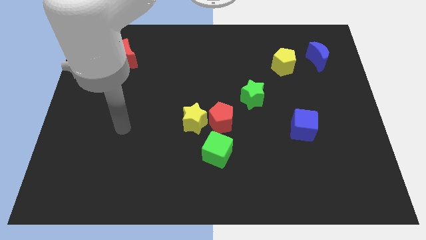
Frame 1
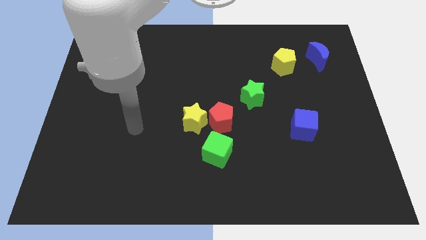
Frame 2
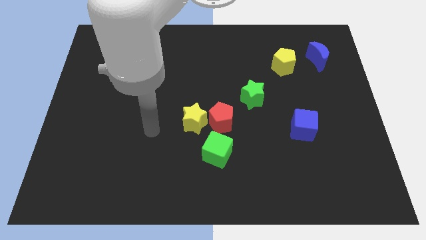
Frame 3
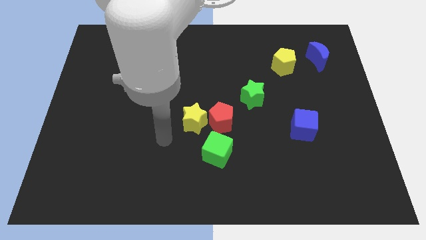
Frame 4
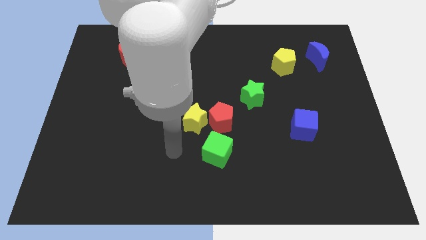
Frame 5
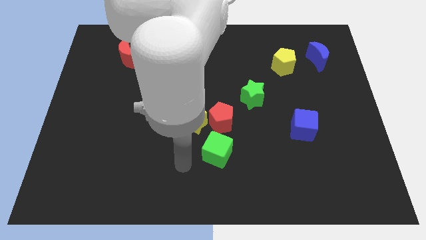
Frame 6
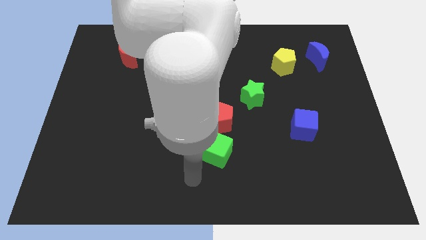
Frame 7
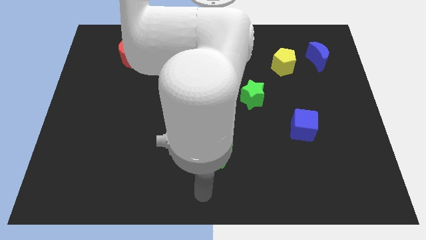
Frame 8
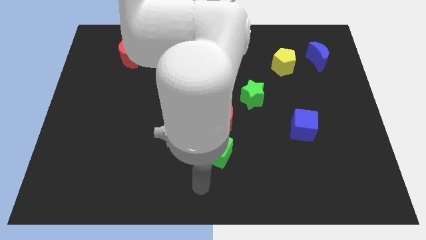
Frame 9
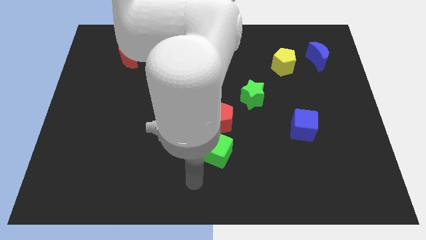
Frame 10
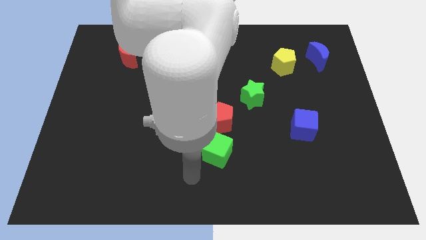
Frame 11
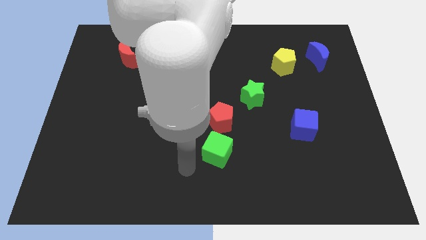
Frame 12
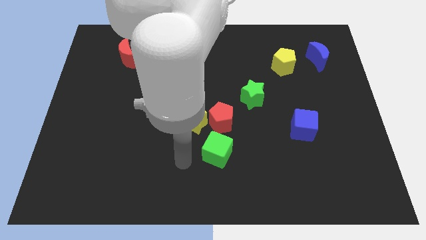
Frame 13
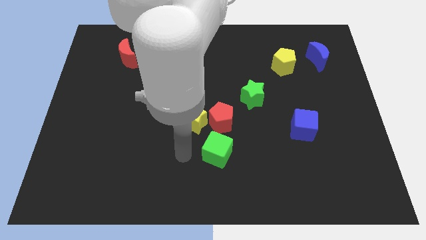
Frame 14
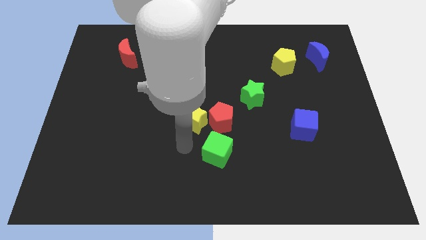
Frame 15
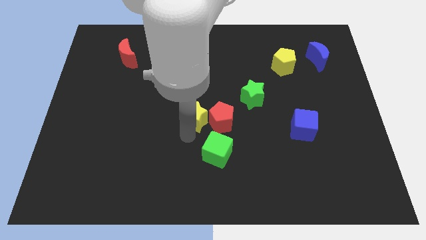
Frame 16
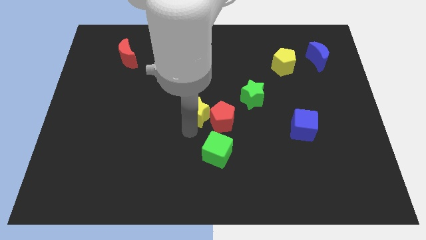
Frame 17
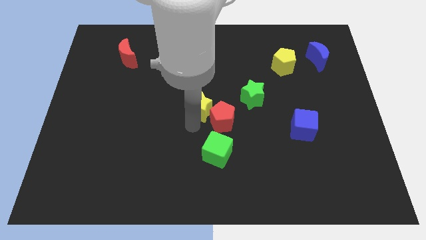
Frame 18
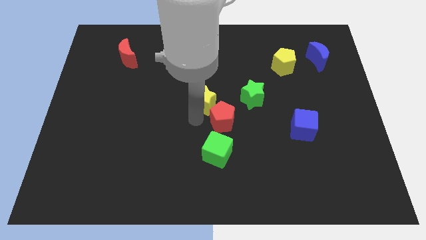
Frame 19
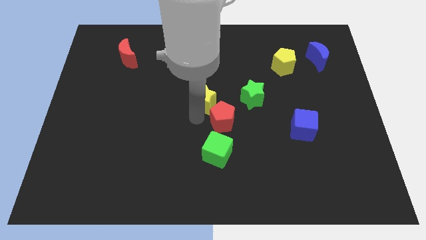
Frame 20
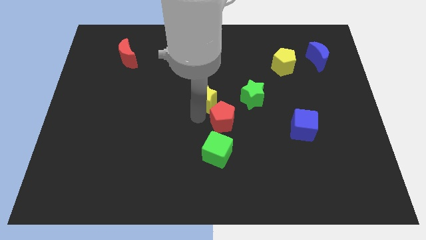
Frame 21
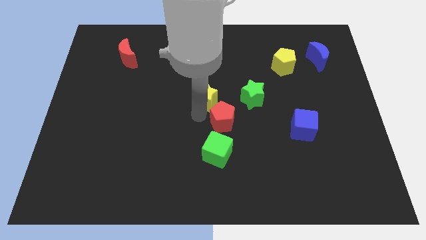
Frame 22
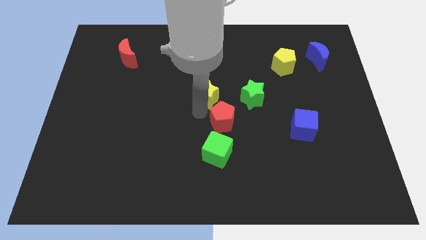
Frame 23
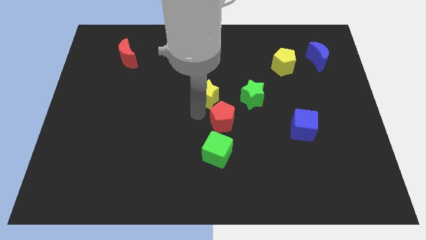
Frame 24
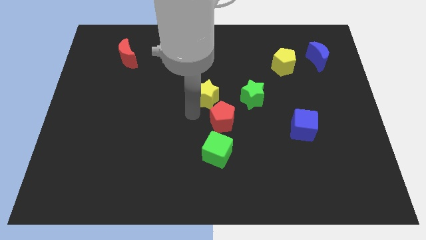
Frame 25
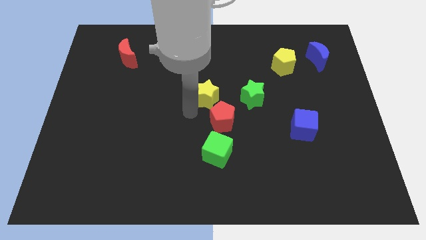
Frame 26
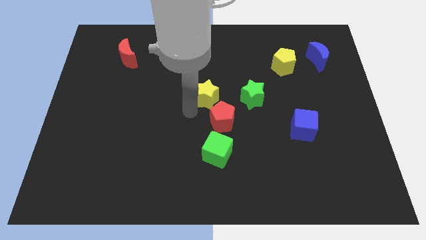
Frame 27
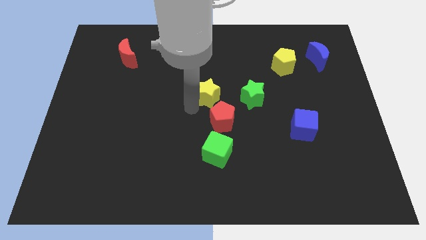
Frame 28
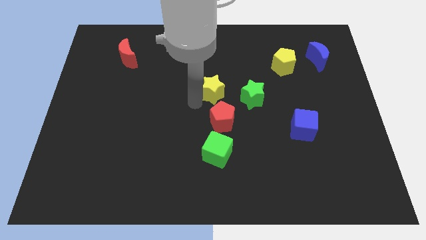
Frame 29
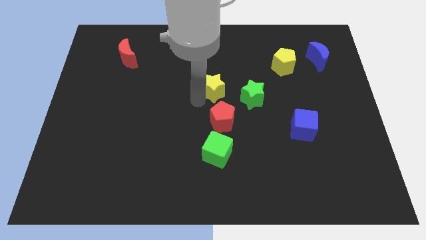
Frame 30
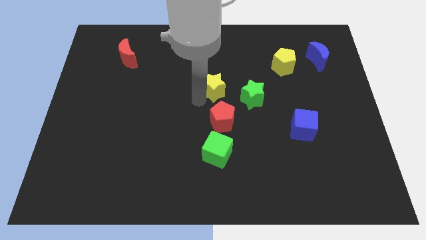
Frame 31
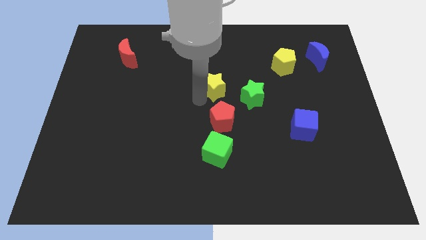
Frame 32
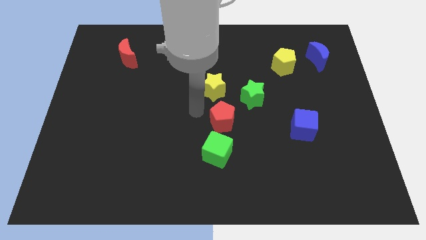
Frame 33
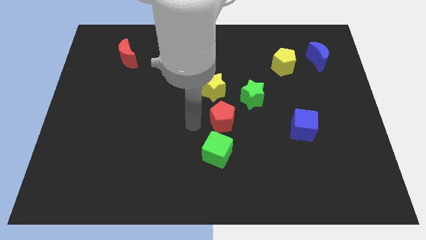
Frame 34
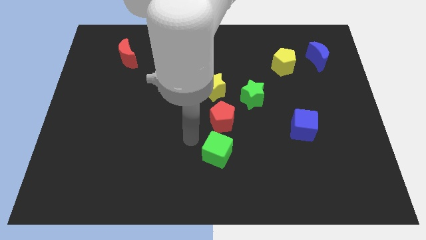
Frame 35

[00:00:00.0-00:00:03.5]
place the yellow star above the red pentagon

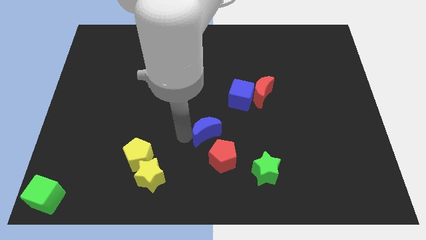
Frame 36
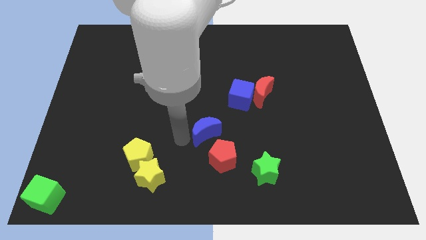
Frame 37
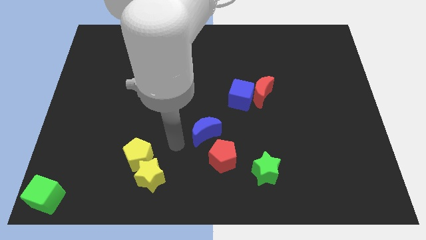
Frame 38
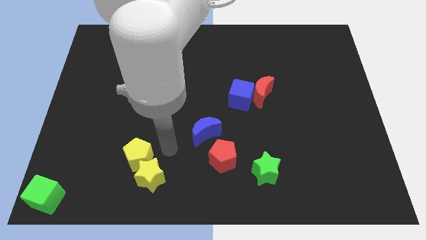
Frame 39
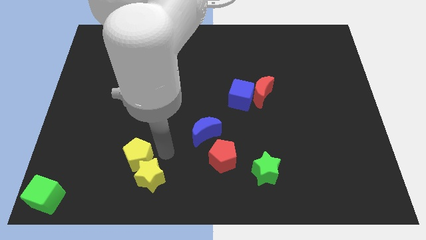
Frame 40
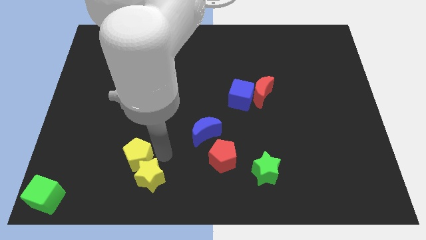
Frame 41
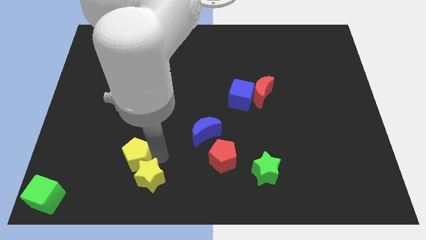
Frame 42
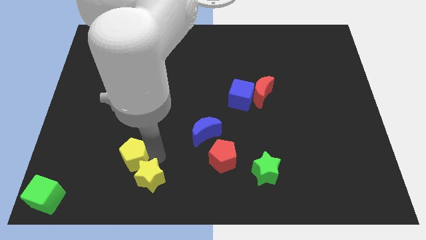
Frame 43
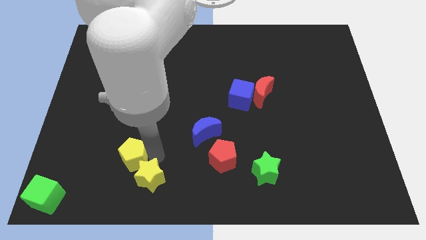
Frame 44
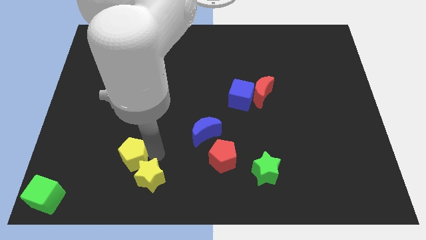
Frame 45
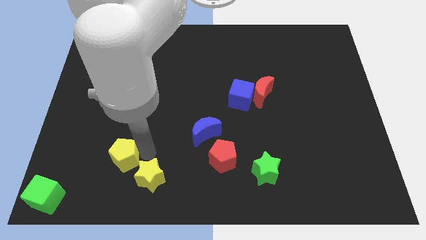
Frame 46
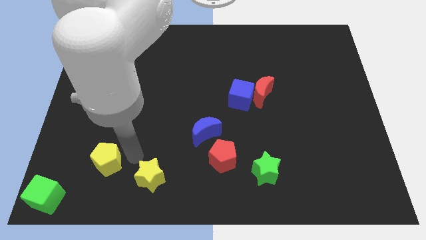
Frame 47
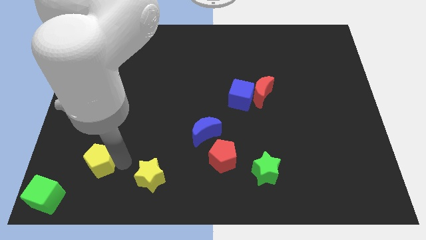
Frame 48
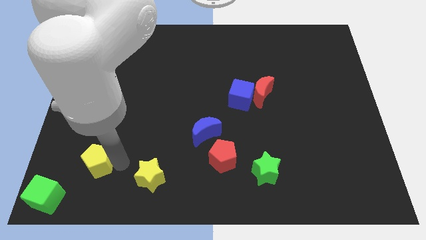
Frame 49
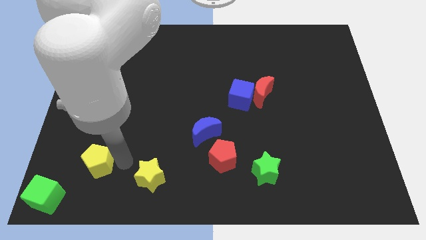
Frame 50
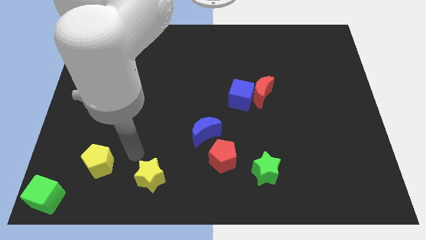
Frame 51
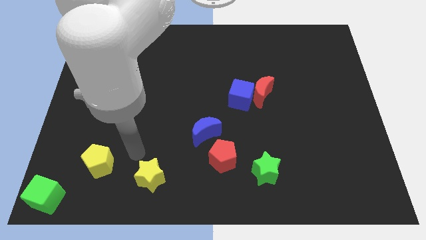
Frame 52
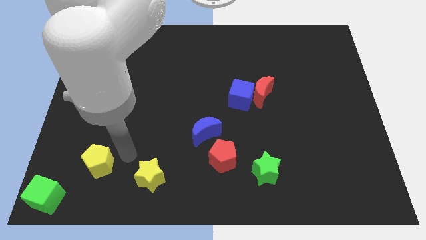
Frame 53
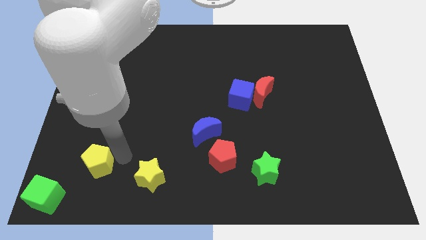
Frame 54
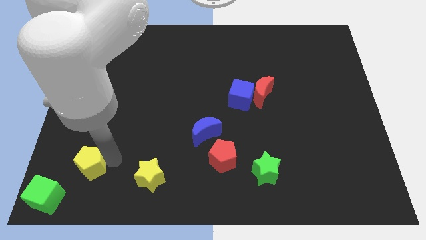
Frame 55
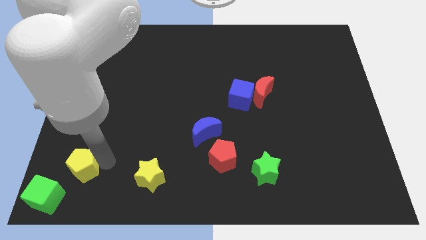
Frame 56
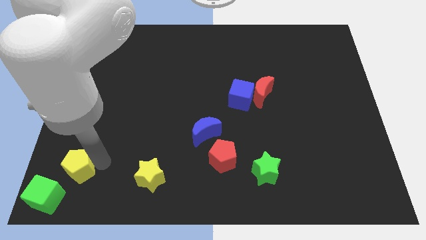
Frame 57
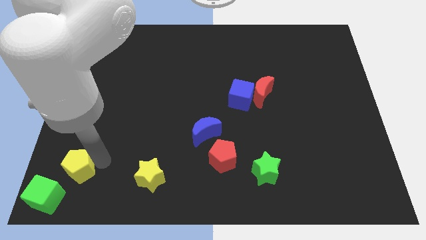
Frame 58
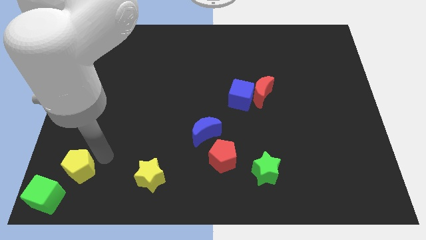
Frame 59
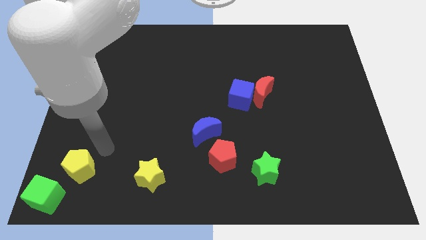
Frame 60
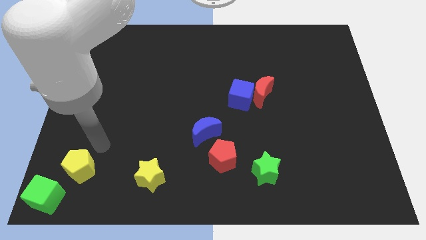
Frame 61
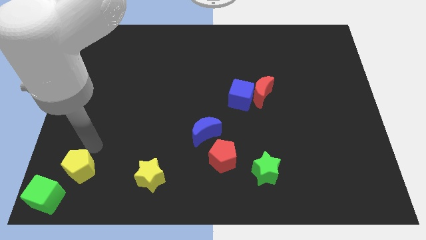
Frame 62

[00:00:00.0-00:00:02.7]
separate the yellow blocks

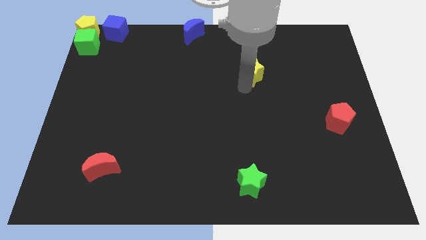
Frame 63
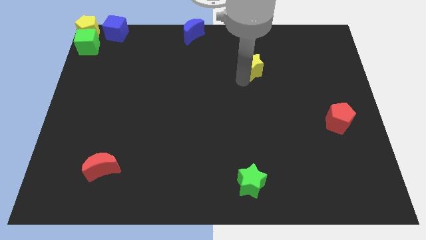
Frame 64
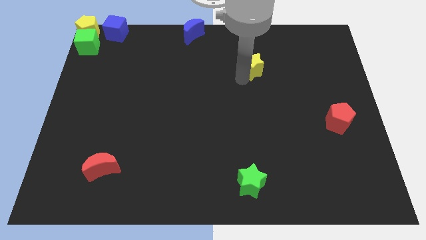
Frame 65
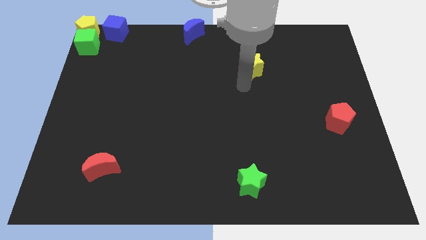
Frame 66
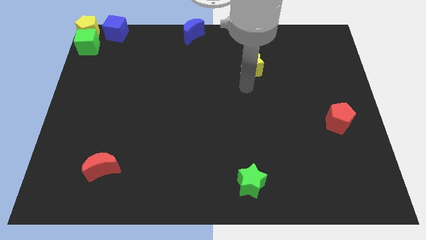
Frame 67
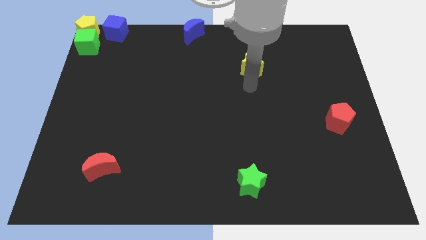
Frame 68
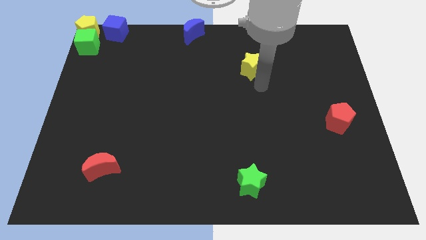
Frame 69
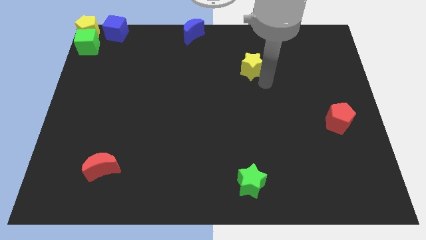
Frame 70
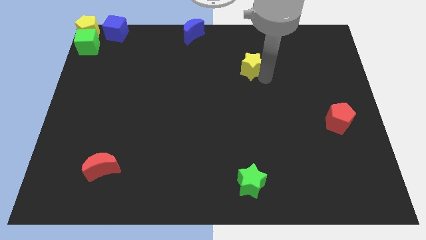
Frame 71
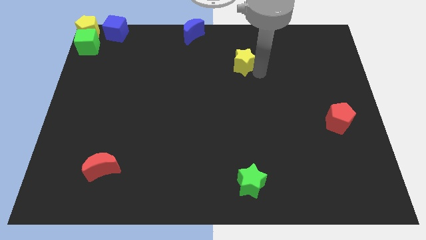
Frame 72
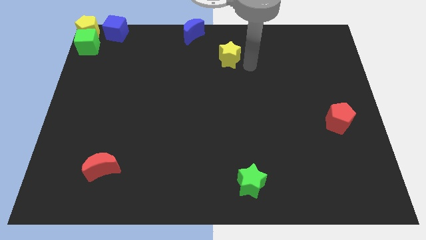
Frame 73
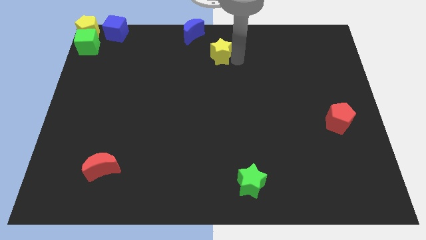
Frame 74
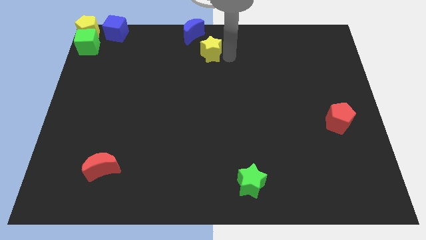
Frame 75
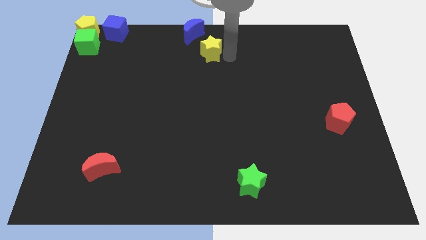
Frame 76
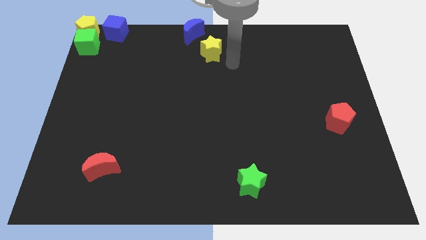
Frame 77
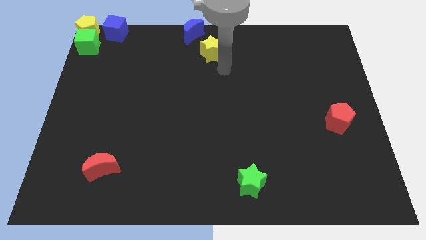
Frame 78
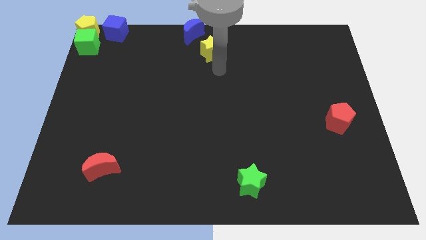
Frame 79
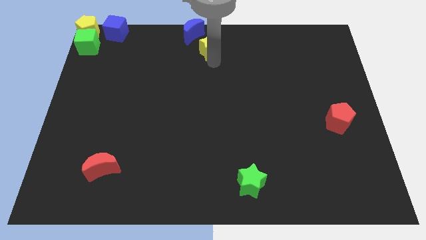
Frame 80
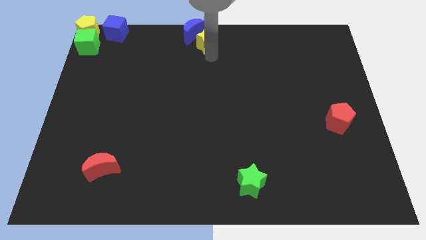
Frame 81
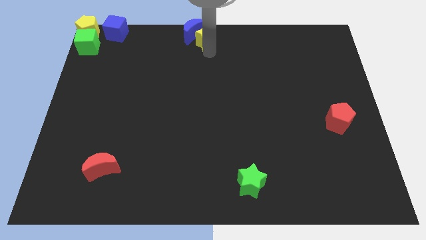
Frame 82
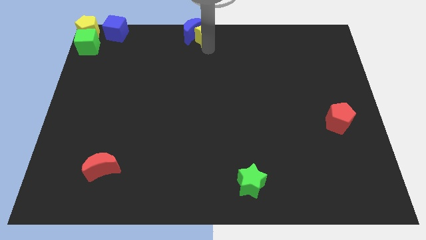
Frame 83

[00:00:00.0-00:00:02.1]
push the yellow star into the blue crescent

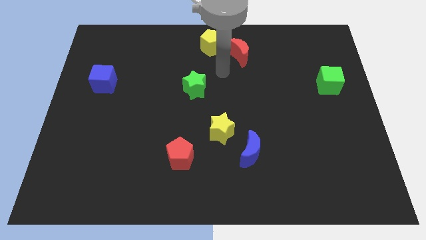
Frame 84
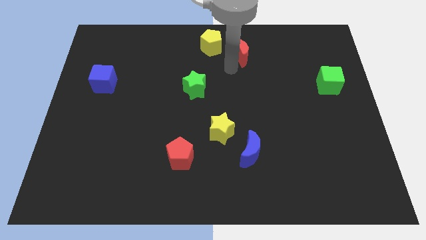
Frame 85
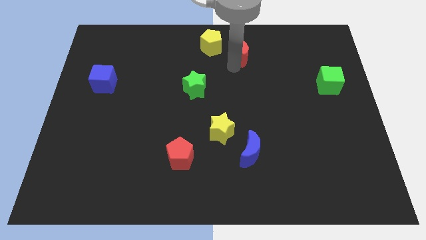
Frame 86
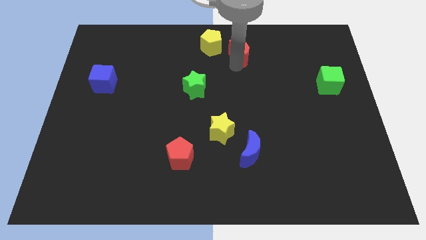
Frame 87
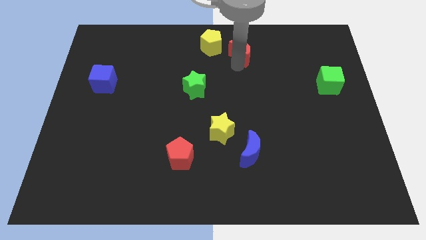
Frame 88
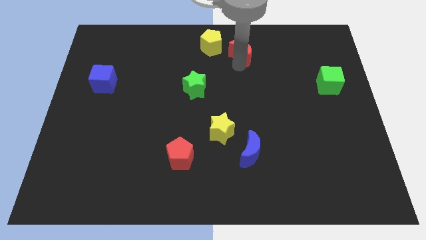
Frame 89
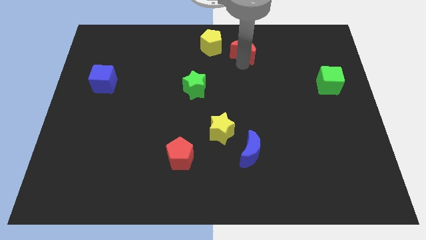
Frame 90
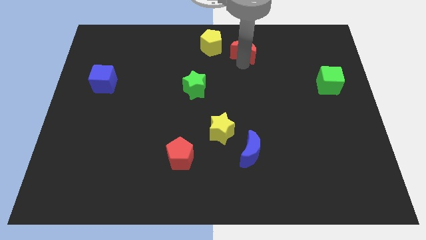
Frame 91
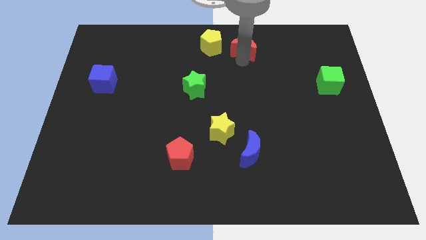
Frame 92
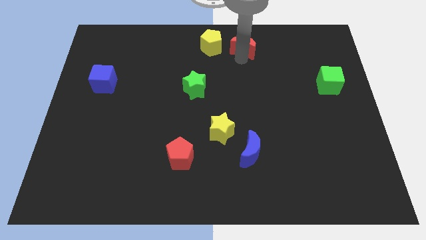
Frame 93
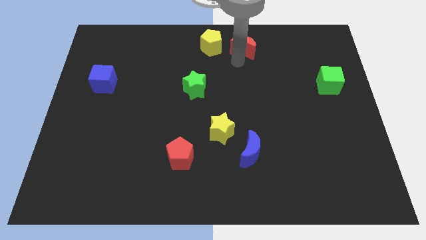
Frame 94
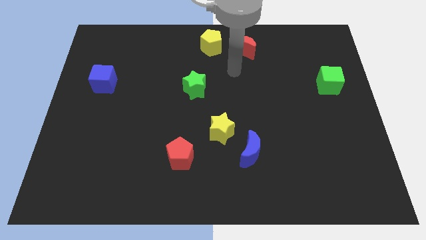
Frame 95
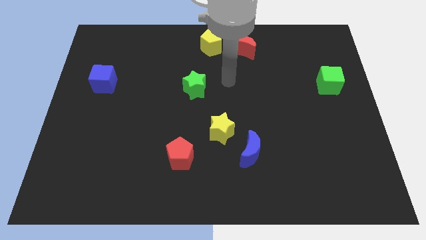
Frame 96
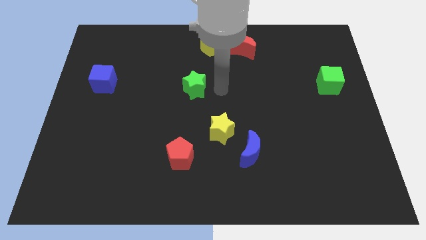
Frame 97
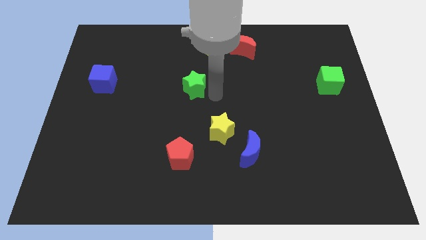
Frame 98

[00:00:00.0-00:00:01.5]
place red moon to the right of yellow pentagon
